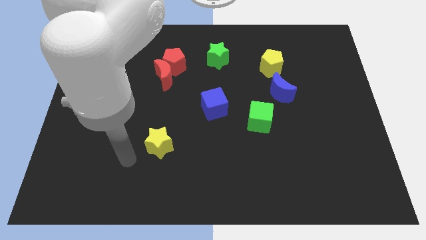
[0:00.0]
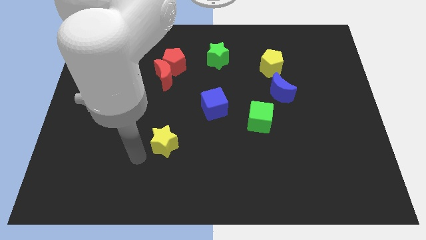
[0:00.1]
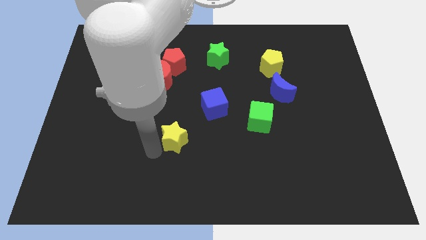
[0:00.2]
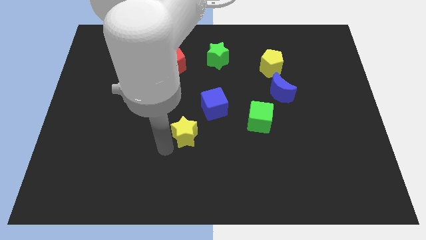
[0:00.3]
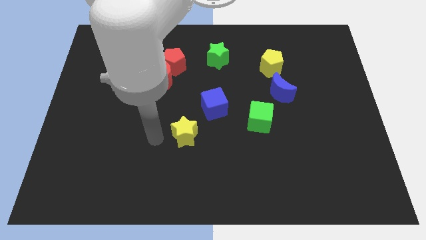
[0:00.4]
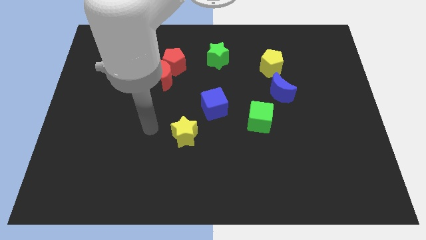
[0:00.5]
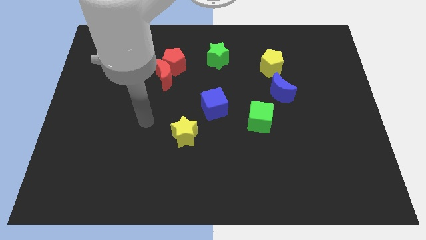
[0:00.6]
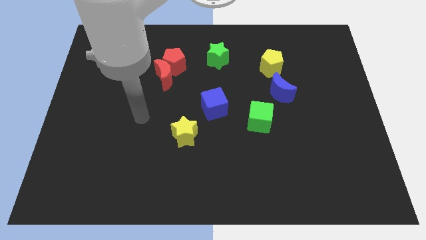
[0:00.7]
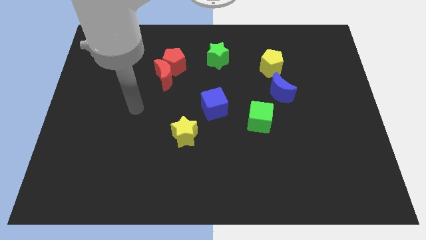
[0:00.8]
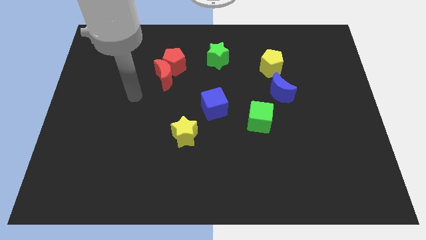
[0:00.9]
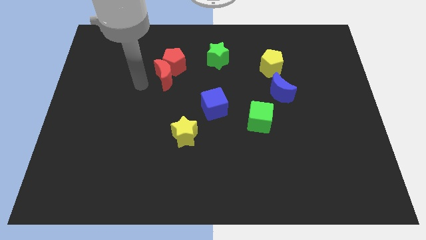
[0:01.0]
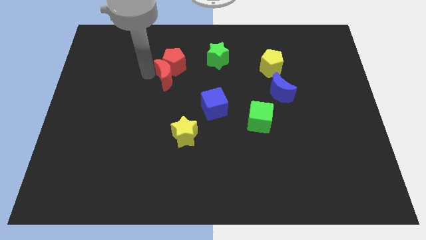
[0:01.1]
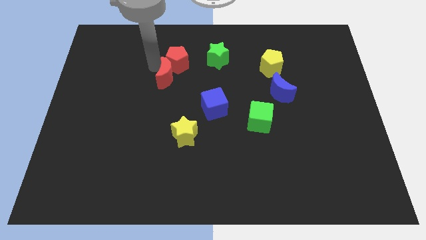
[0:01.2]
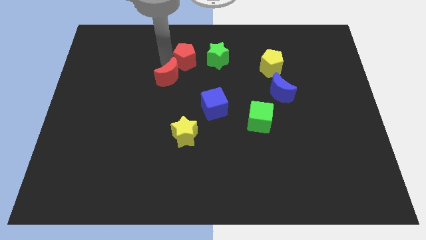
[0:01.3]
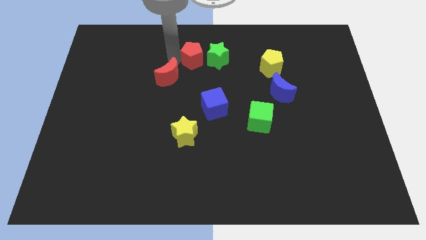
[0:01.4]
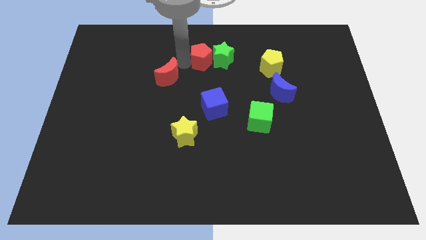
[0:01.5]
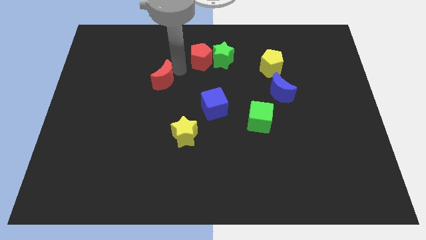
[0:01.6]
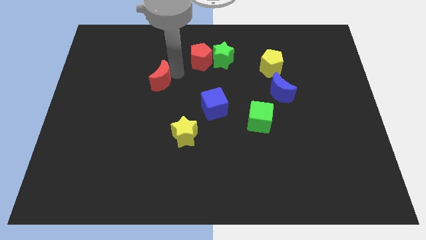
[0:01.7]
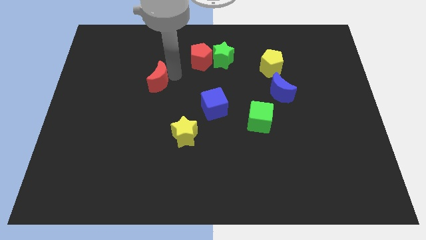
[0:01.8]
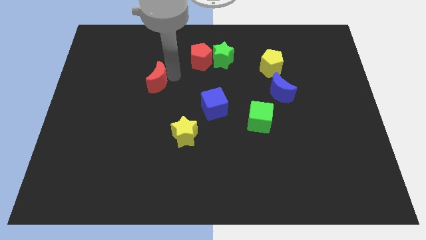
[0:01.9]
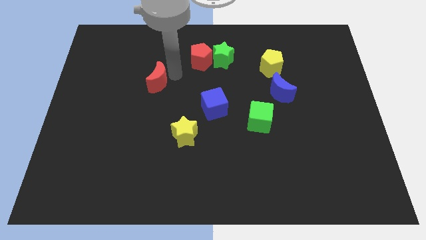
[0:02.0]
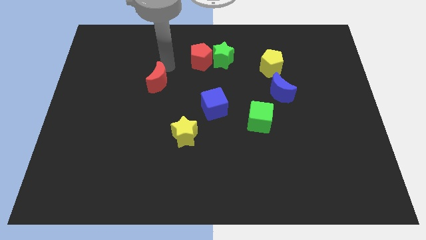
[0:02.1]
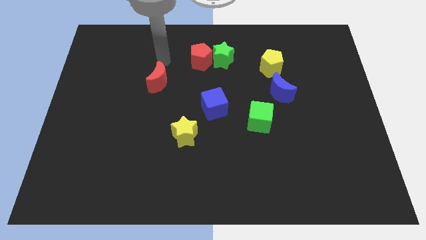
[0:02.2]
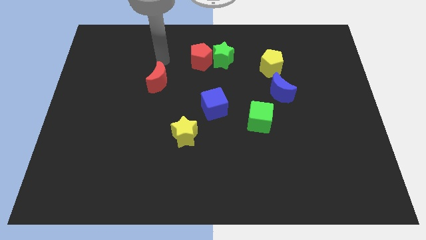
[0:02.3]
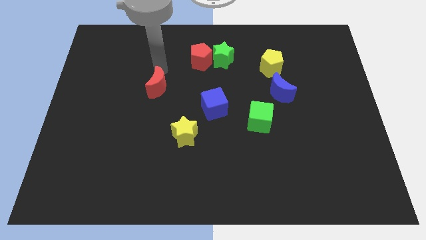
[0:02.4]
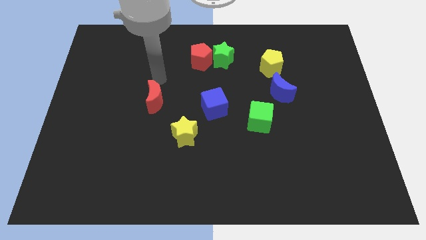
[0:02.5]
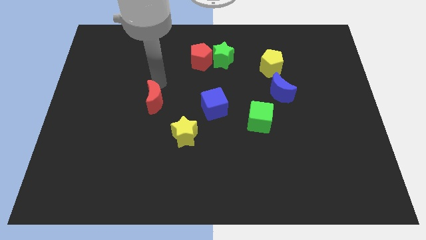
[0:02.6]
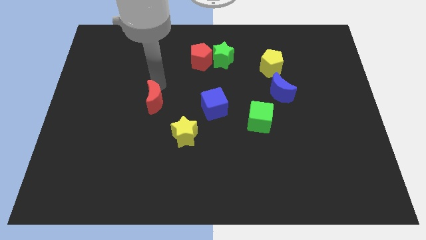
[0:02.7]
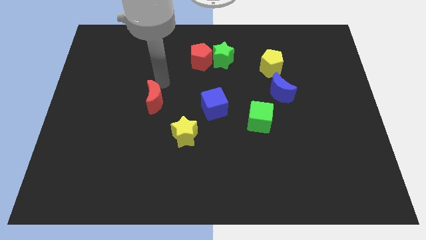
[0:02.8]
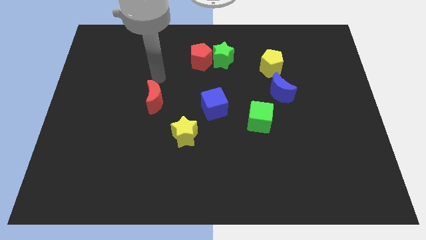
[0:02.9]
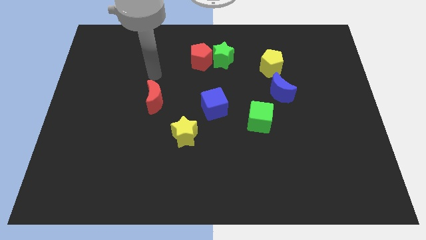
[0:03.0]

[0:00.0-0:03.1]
move the red moon diagonal to the yellow star

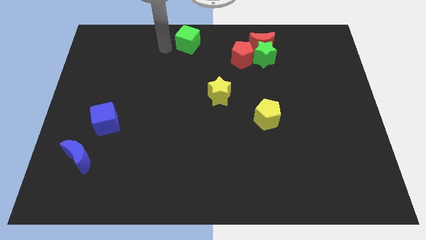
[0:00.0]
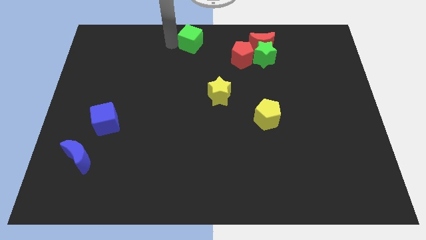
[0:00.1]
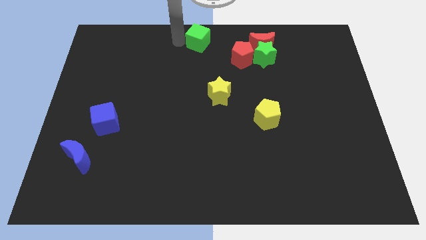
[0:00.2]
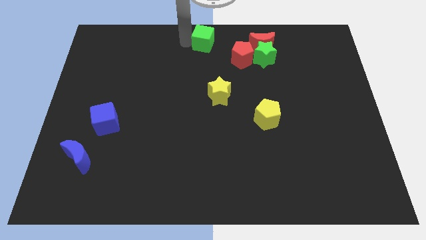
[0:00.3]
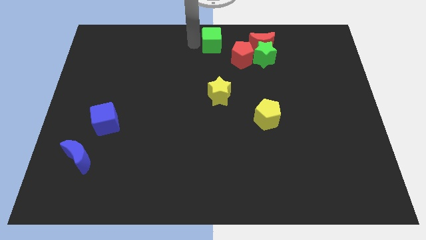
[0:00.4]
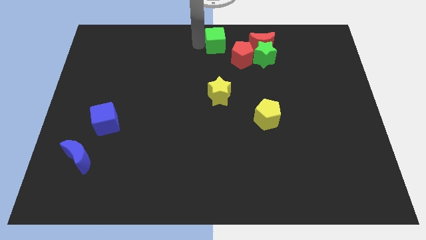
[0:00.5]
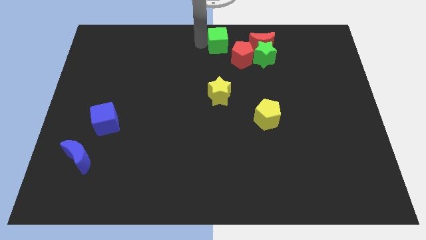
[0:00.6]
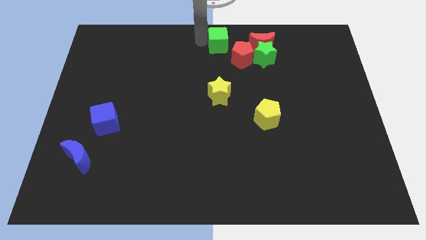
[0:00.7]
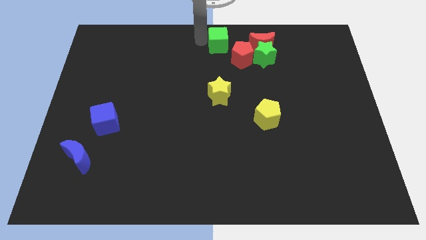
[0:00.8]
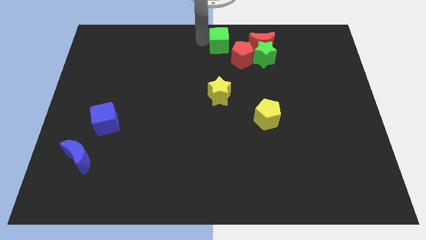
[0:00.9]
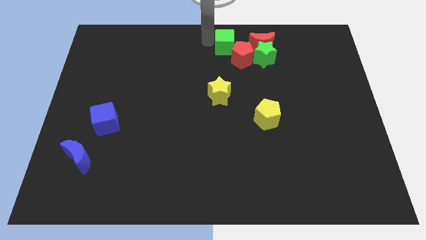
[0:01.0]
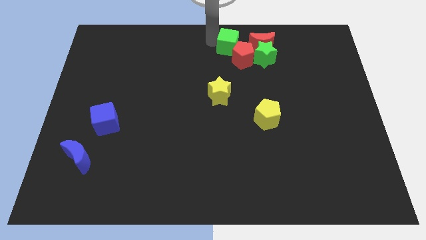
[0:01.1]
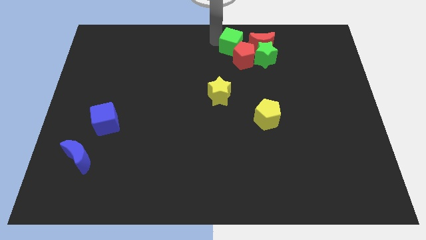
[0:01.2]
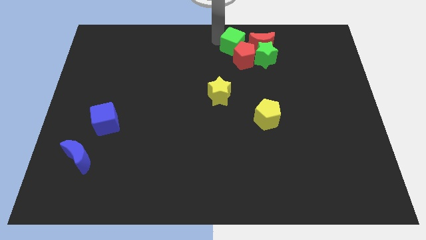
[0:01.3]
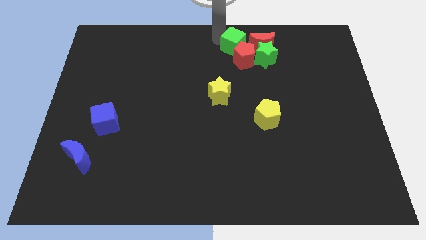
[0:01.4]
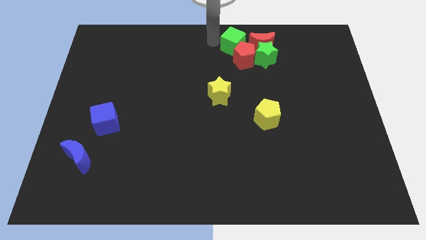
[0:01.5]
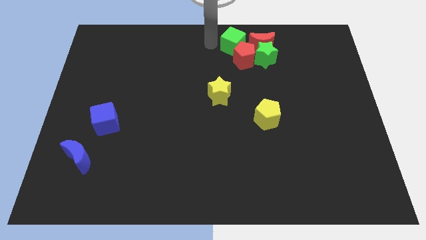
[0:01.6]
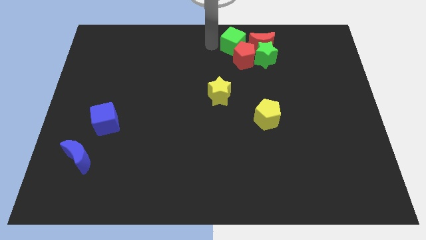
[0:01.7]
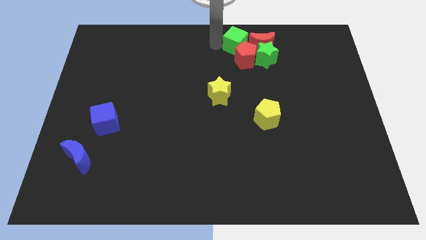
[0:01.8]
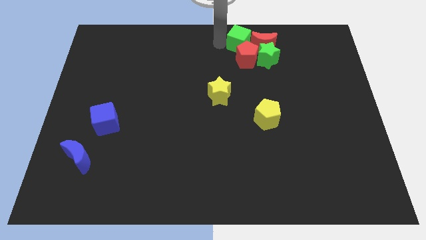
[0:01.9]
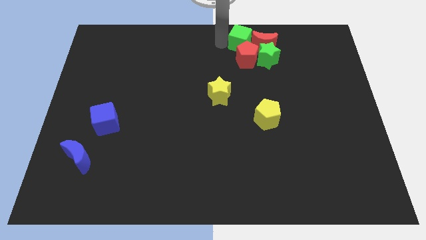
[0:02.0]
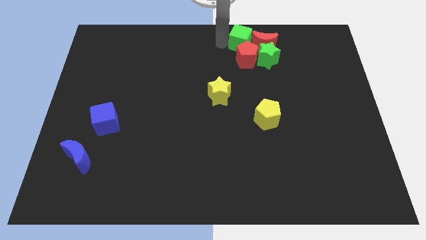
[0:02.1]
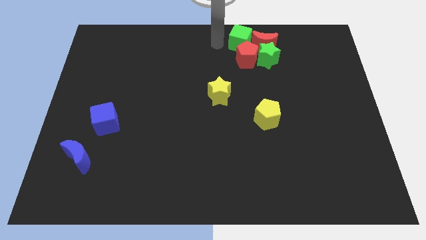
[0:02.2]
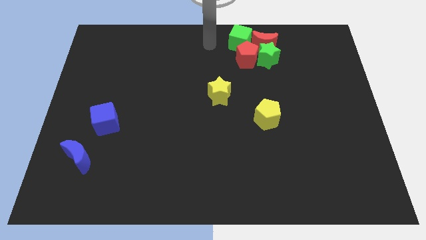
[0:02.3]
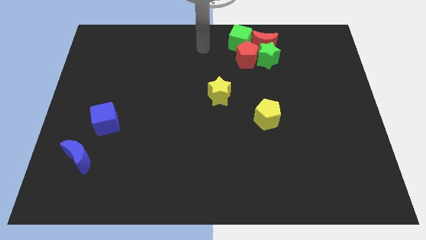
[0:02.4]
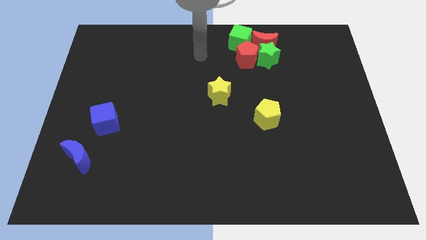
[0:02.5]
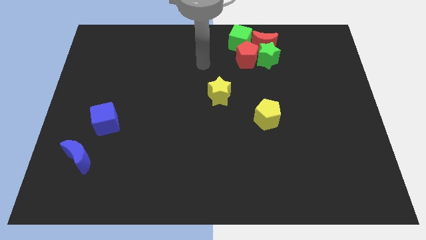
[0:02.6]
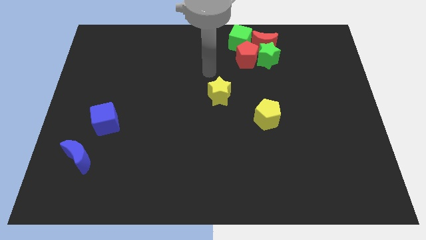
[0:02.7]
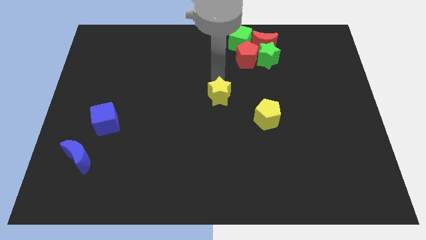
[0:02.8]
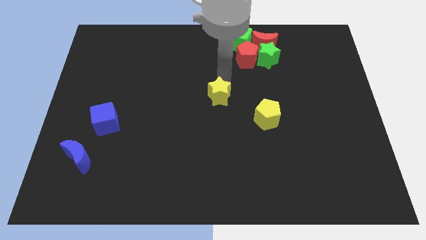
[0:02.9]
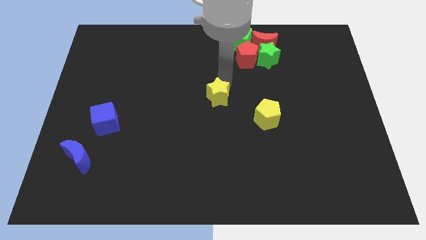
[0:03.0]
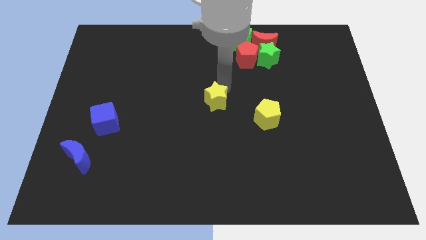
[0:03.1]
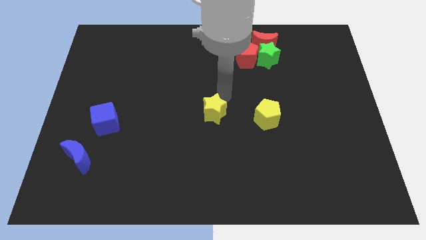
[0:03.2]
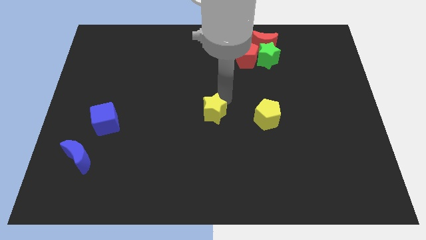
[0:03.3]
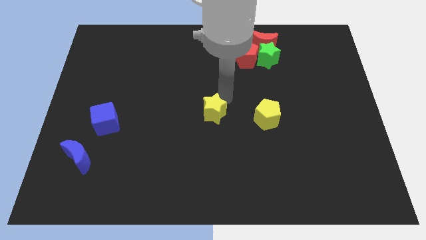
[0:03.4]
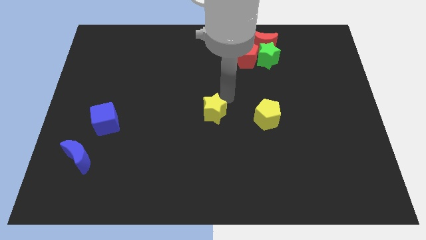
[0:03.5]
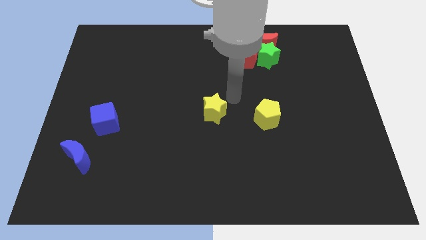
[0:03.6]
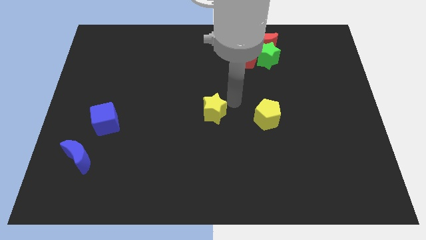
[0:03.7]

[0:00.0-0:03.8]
move yellow star to the center of the board

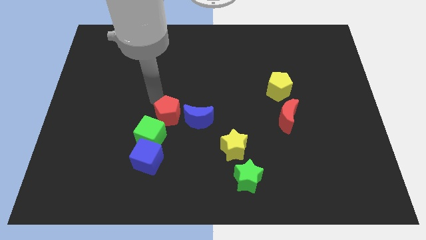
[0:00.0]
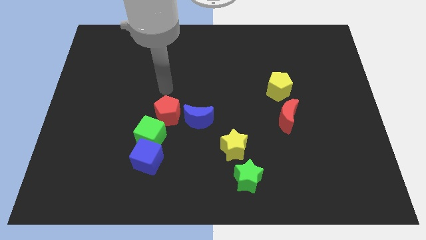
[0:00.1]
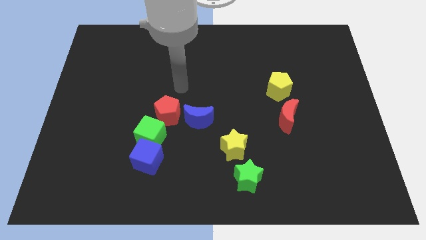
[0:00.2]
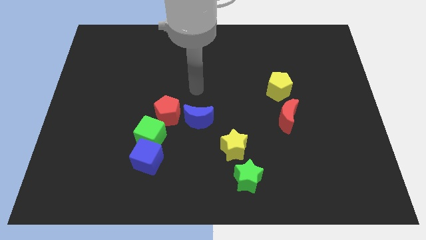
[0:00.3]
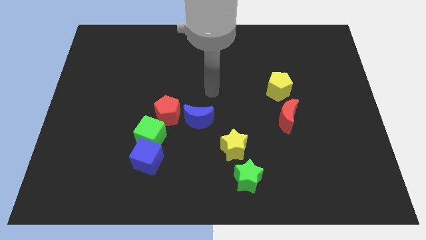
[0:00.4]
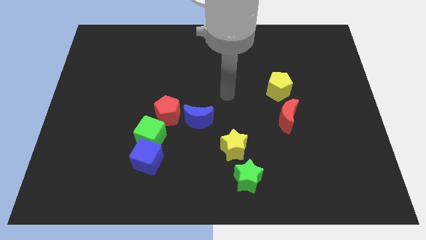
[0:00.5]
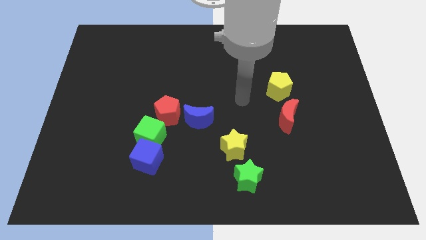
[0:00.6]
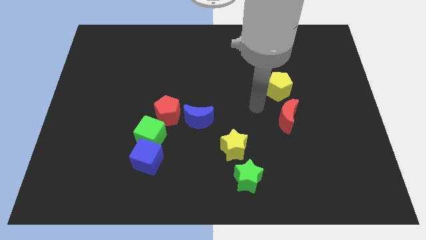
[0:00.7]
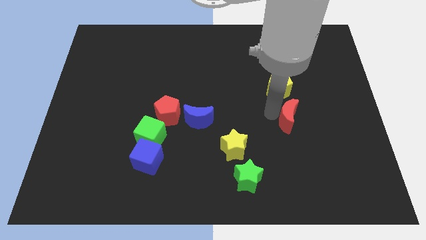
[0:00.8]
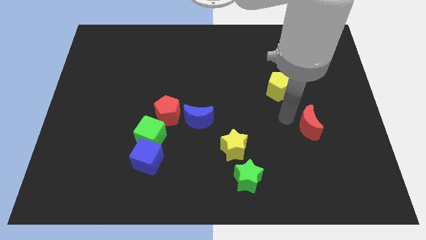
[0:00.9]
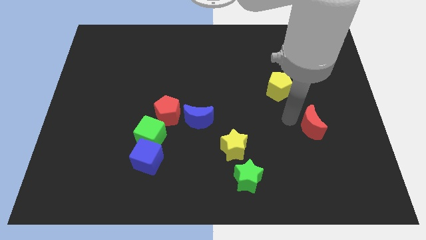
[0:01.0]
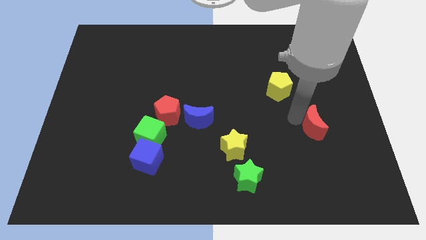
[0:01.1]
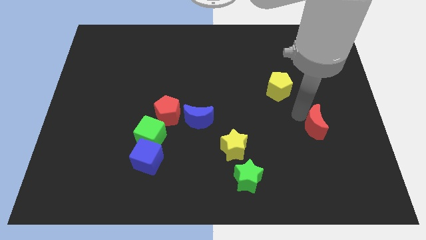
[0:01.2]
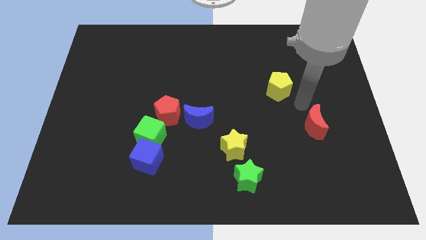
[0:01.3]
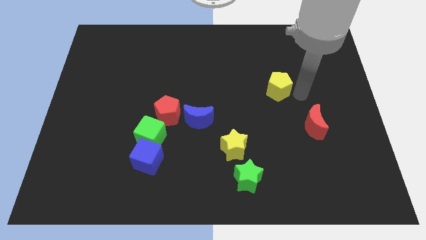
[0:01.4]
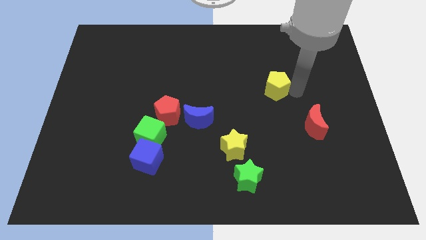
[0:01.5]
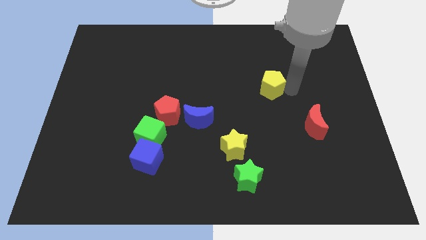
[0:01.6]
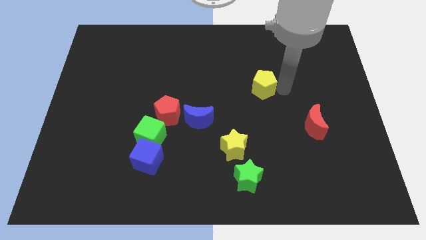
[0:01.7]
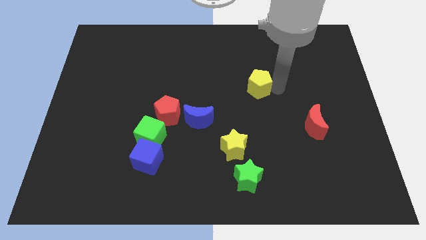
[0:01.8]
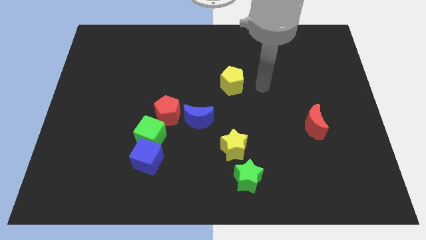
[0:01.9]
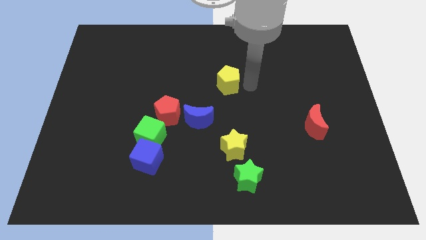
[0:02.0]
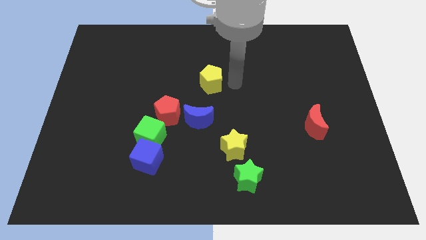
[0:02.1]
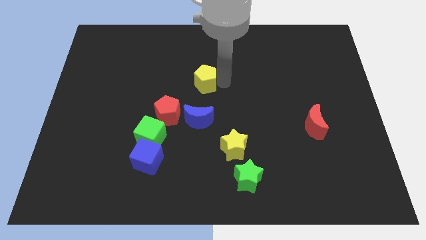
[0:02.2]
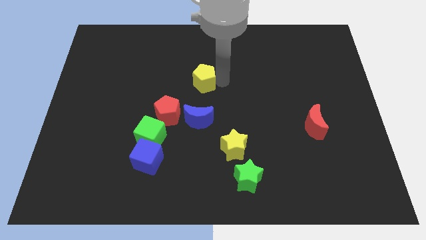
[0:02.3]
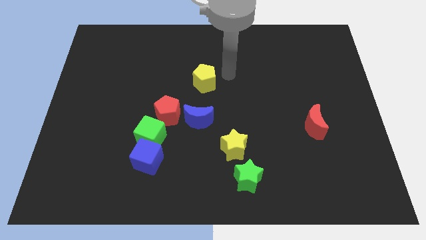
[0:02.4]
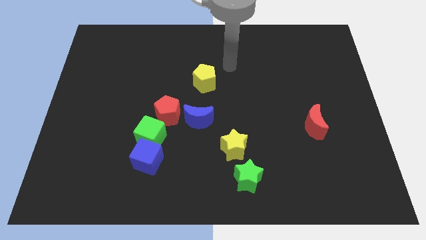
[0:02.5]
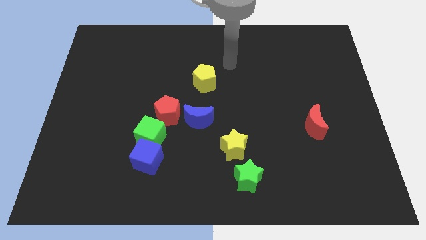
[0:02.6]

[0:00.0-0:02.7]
move the yellow pentagon and red moon away from each other
